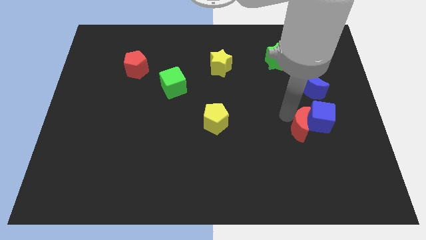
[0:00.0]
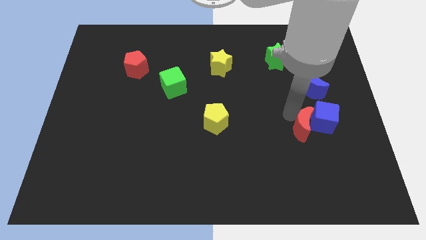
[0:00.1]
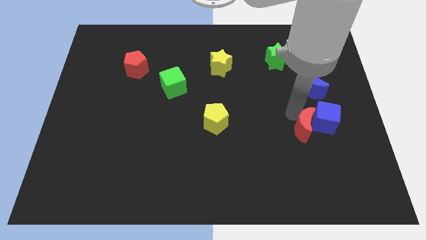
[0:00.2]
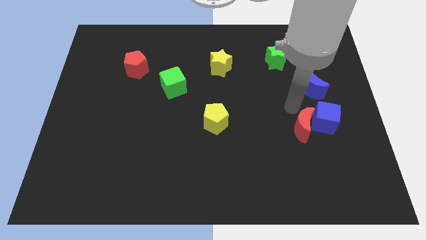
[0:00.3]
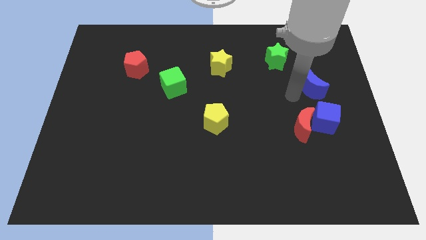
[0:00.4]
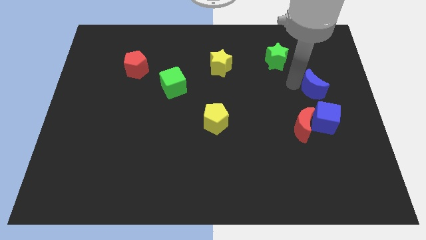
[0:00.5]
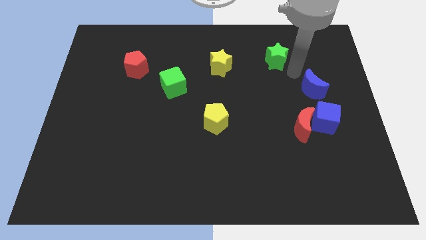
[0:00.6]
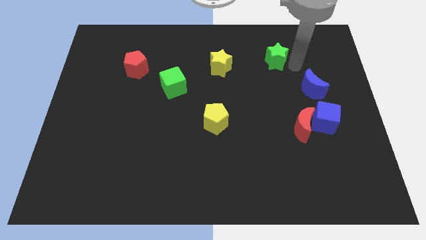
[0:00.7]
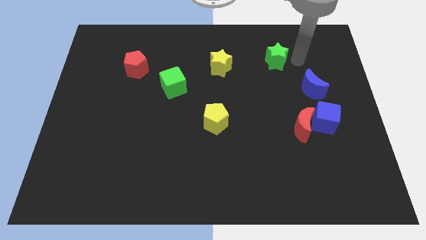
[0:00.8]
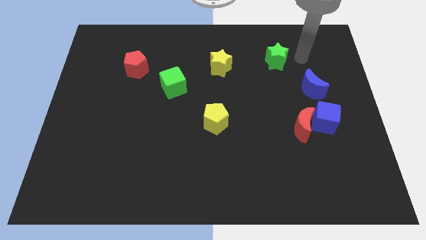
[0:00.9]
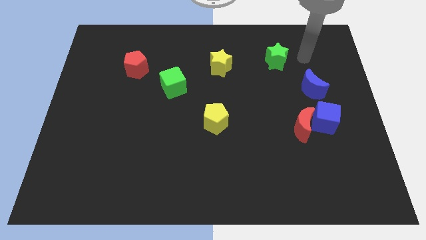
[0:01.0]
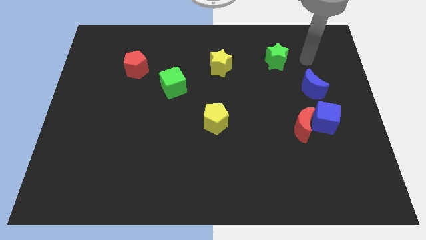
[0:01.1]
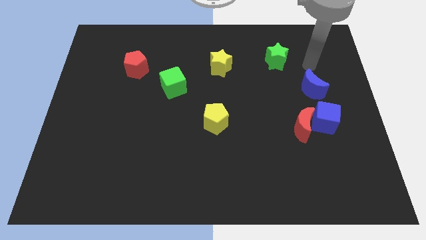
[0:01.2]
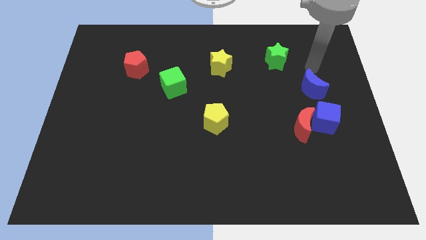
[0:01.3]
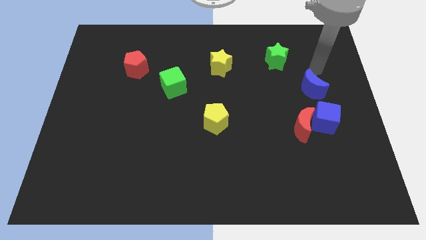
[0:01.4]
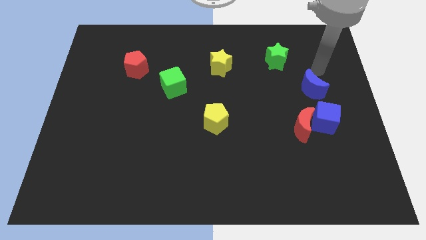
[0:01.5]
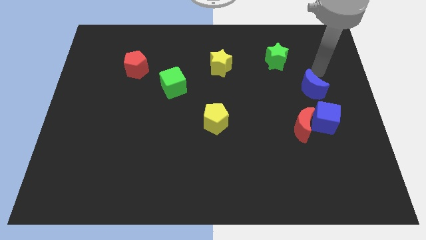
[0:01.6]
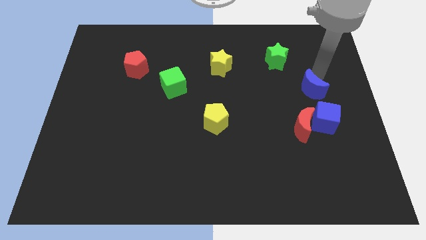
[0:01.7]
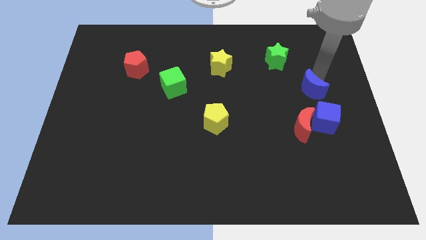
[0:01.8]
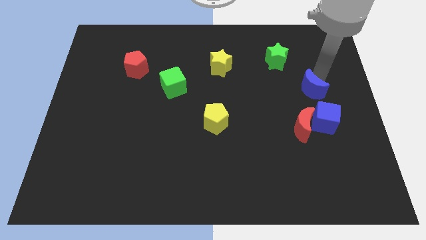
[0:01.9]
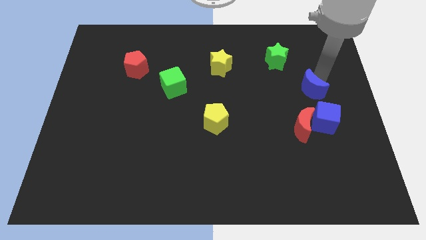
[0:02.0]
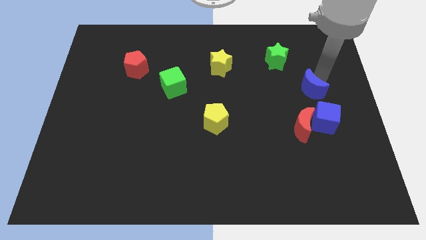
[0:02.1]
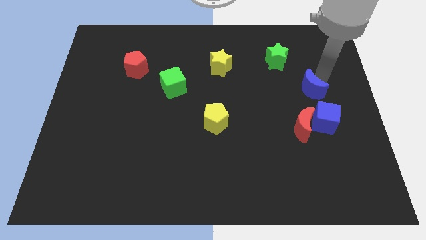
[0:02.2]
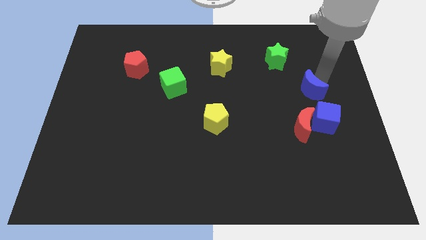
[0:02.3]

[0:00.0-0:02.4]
move your arm close to the blue moon

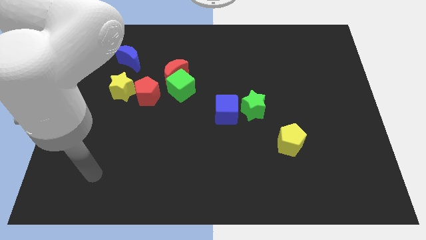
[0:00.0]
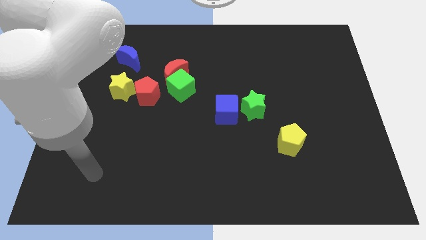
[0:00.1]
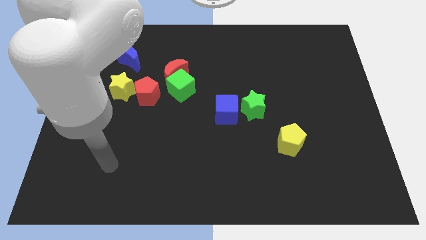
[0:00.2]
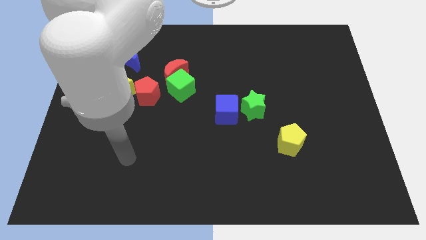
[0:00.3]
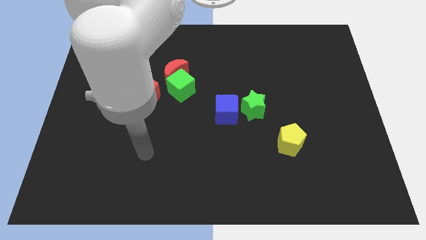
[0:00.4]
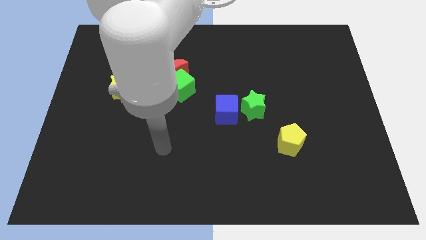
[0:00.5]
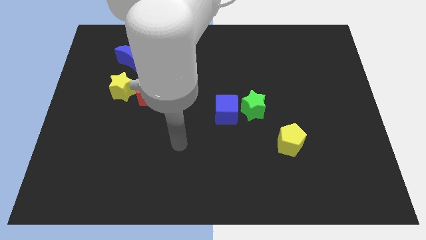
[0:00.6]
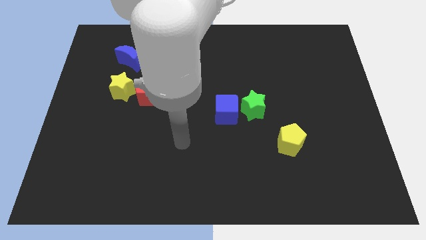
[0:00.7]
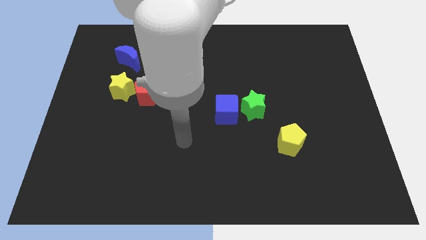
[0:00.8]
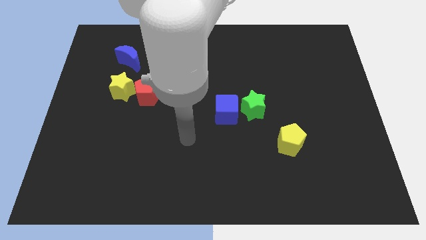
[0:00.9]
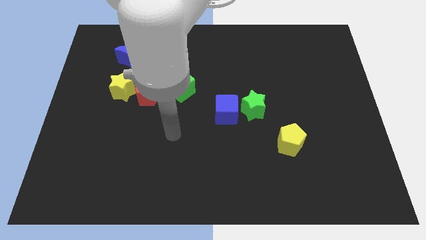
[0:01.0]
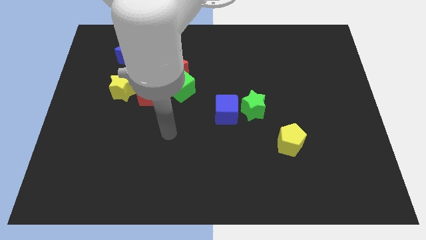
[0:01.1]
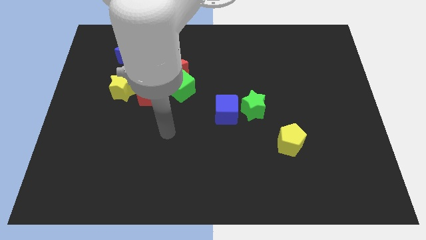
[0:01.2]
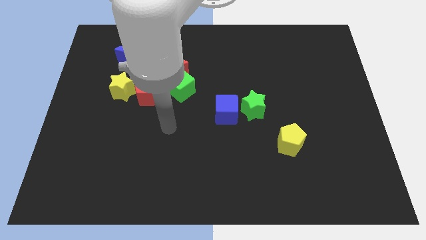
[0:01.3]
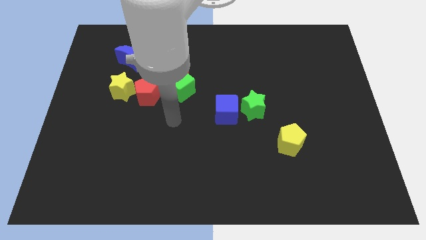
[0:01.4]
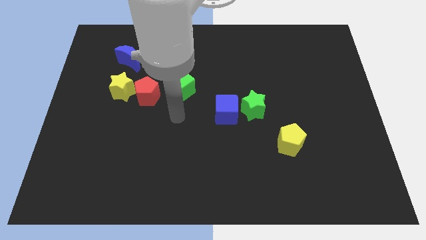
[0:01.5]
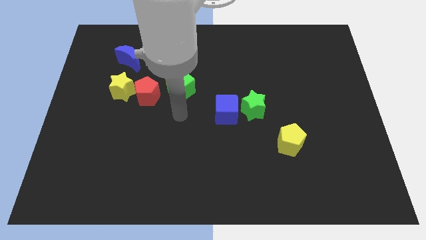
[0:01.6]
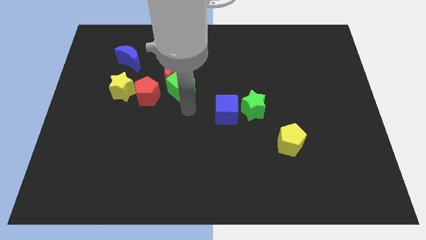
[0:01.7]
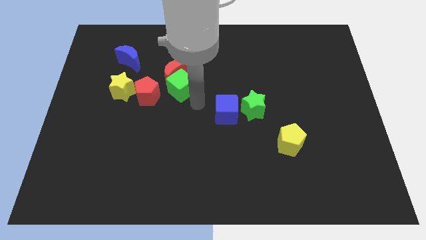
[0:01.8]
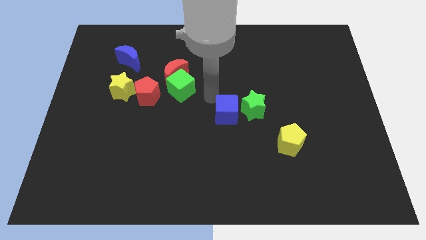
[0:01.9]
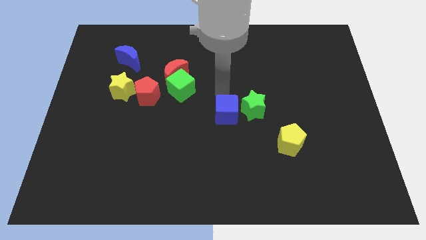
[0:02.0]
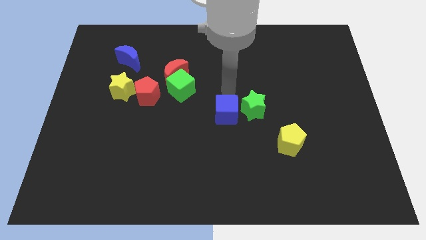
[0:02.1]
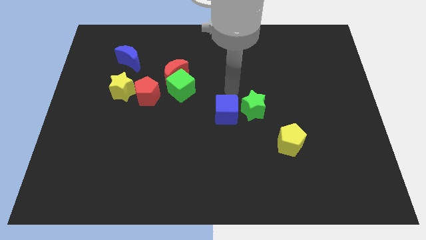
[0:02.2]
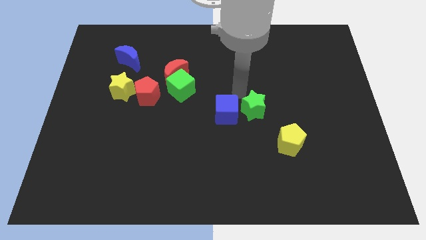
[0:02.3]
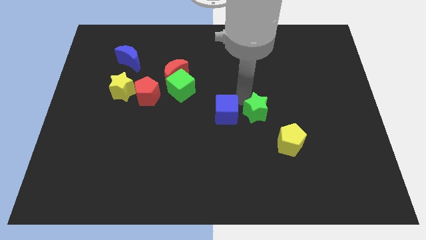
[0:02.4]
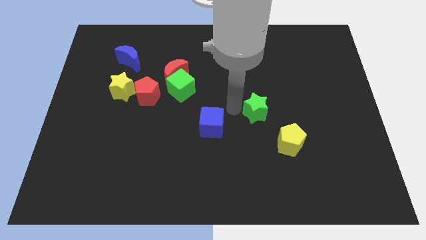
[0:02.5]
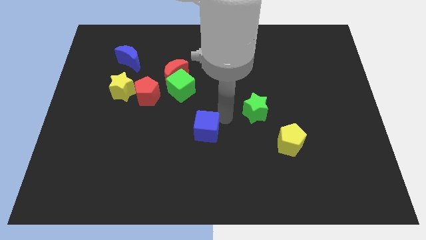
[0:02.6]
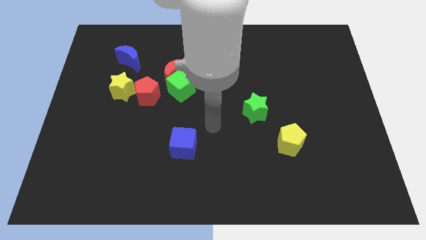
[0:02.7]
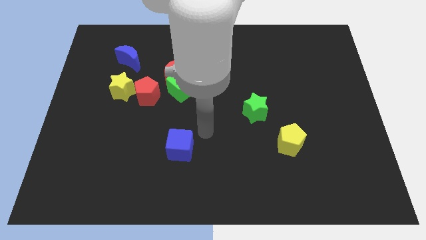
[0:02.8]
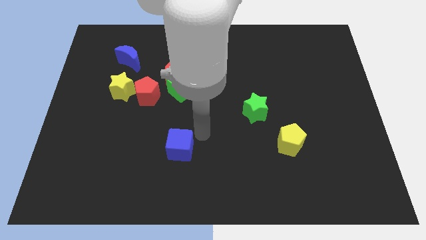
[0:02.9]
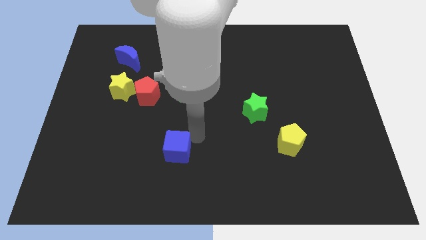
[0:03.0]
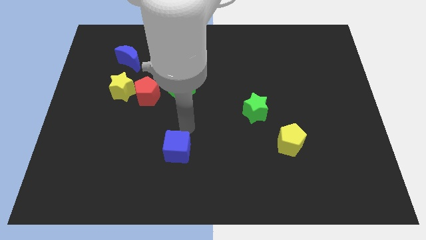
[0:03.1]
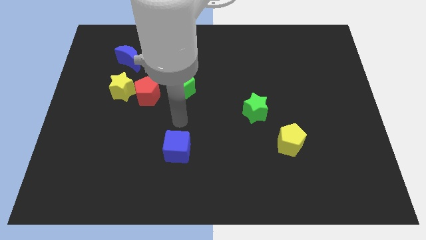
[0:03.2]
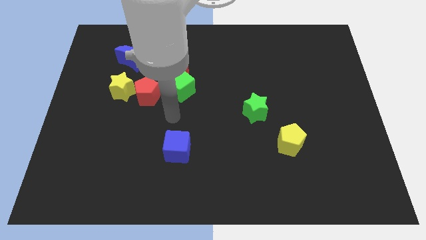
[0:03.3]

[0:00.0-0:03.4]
move the blue cube diagonally on the bottom left side of the green star

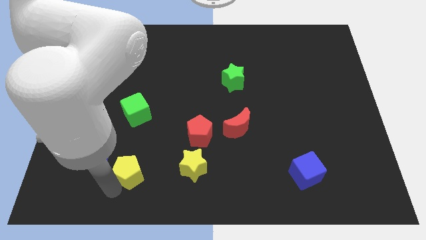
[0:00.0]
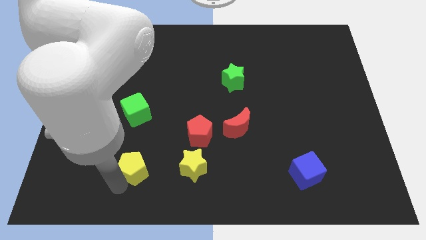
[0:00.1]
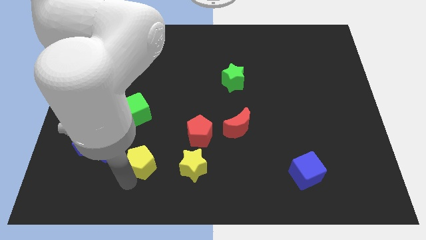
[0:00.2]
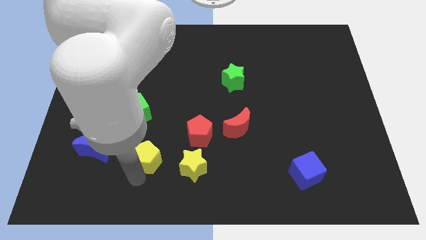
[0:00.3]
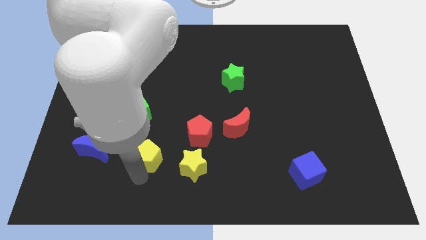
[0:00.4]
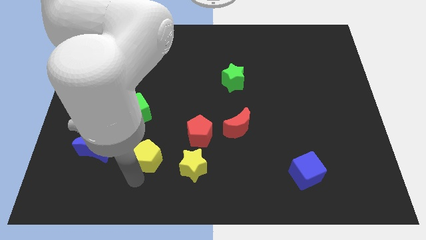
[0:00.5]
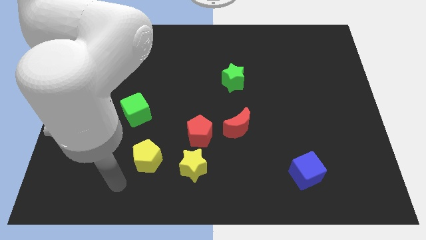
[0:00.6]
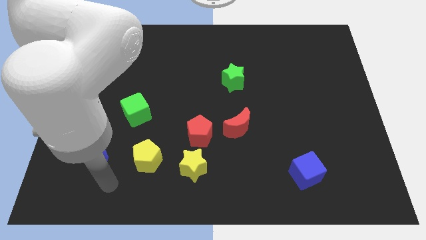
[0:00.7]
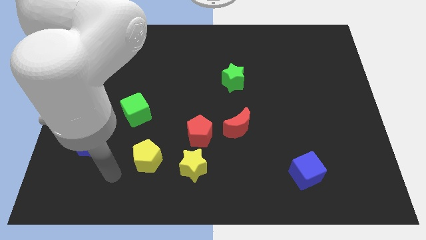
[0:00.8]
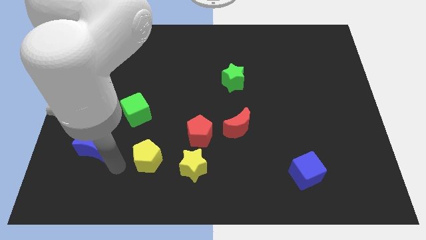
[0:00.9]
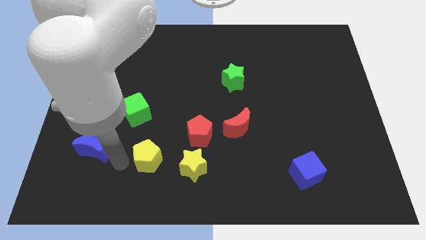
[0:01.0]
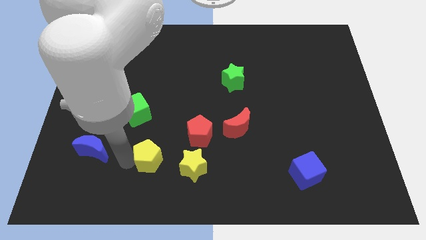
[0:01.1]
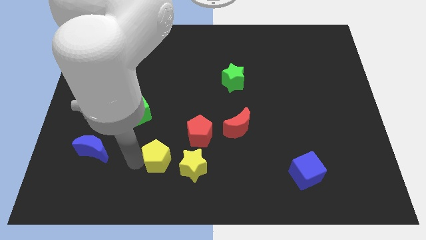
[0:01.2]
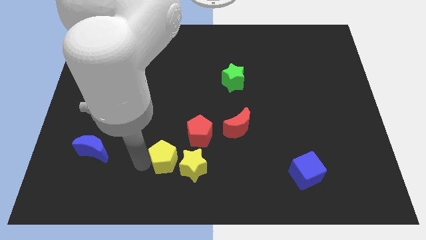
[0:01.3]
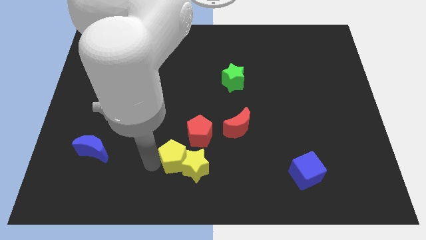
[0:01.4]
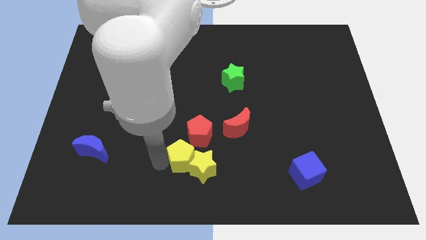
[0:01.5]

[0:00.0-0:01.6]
move the yellow pentagon into the yellow star

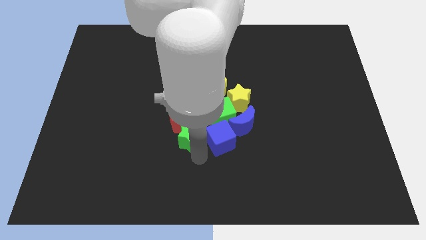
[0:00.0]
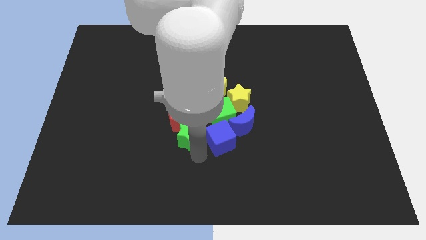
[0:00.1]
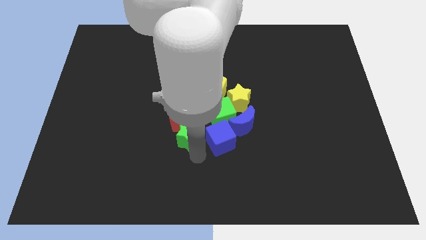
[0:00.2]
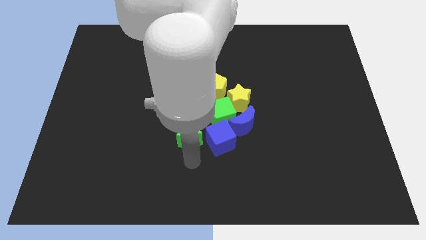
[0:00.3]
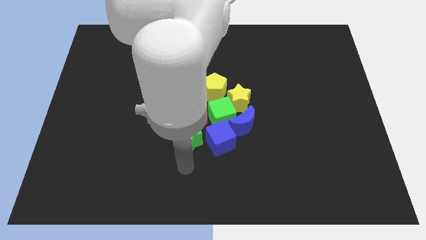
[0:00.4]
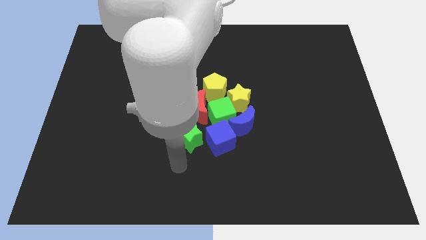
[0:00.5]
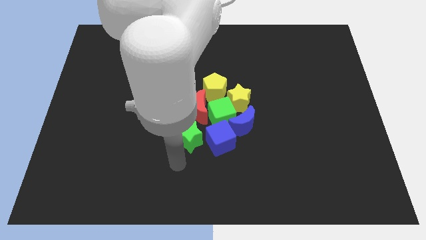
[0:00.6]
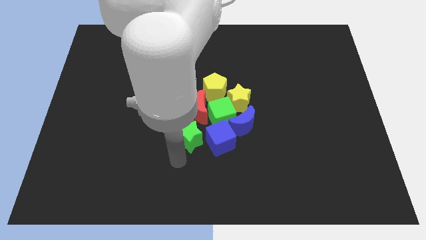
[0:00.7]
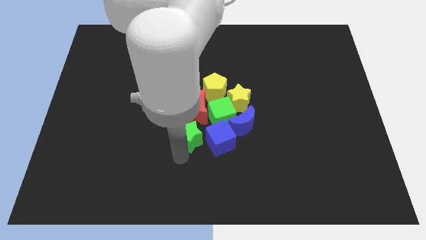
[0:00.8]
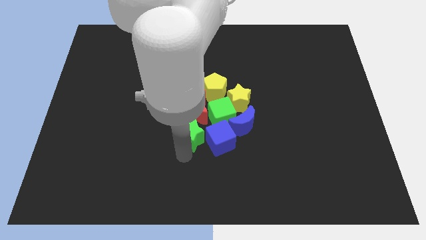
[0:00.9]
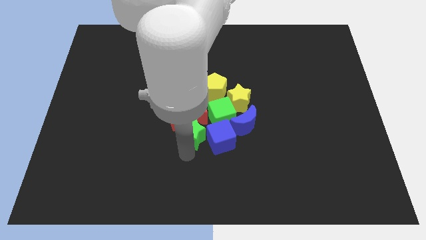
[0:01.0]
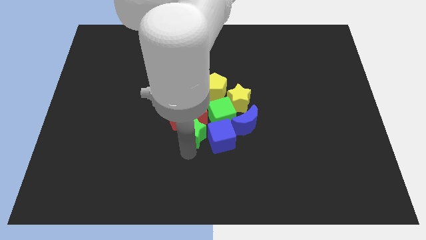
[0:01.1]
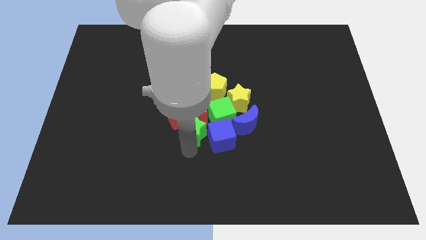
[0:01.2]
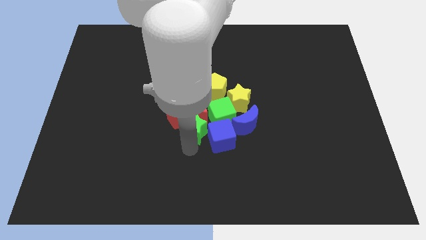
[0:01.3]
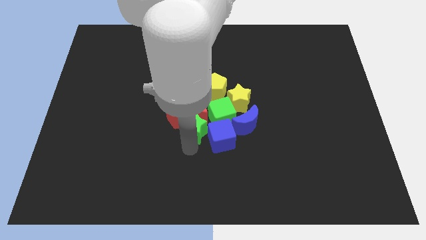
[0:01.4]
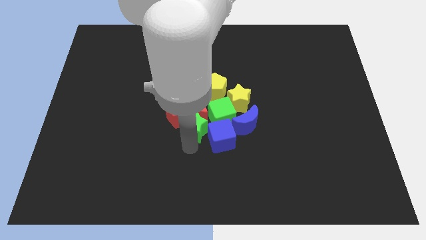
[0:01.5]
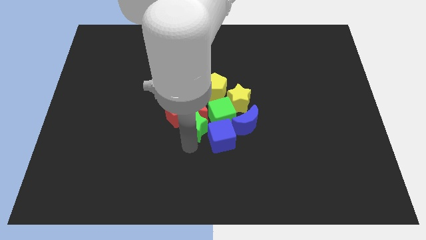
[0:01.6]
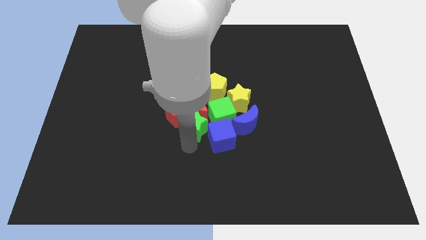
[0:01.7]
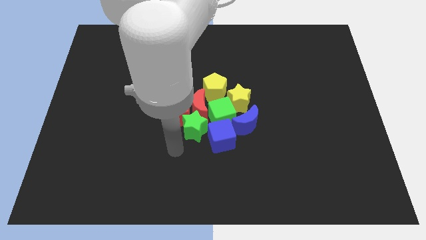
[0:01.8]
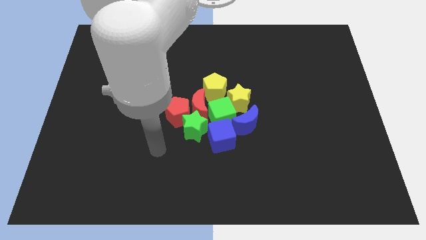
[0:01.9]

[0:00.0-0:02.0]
move the green star into the red blocks
